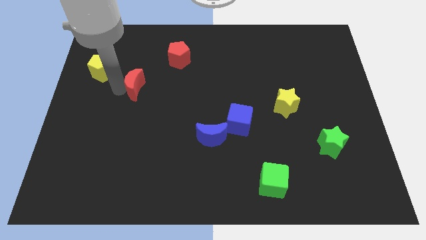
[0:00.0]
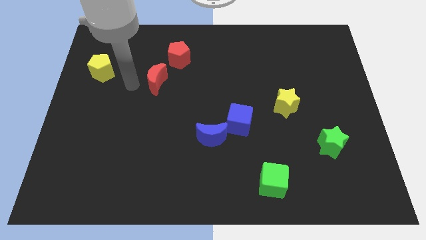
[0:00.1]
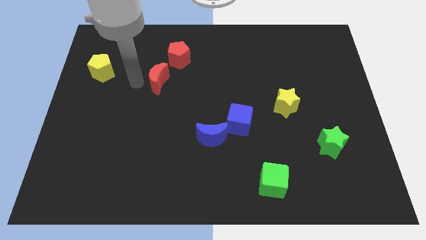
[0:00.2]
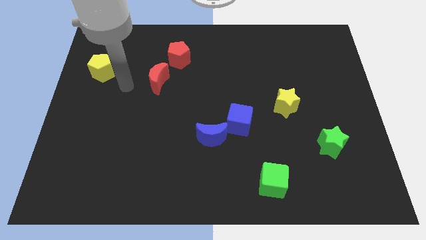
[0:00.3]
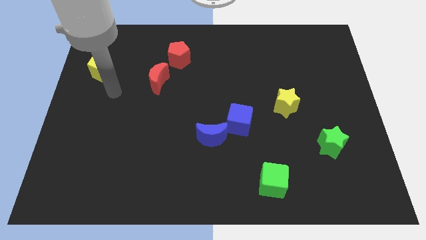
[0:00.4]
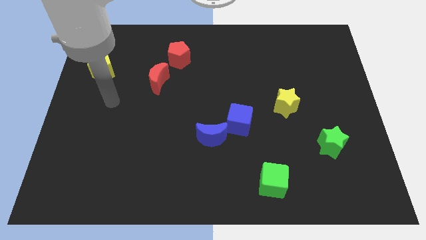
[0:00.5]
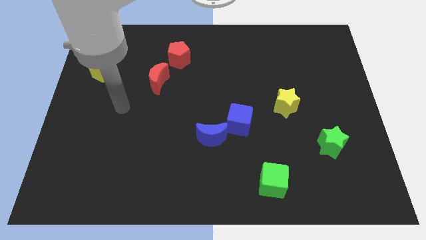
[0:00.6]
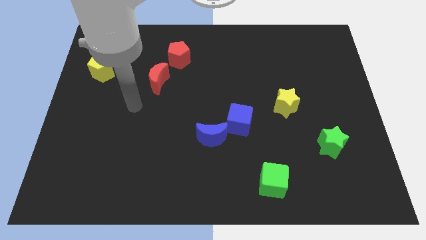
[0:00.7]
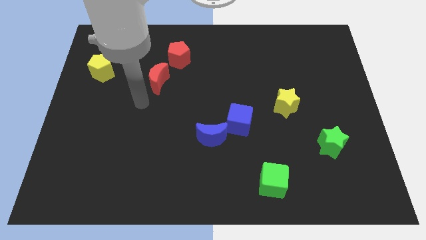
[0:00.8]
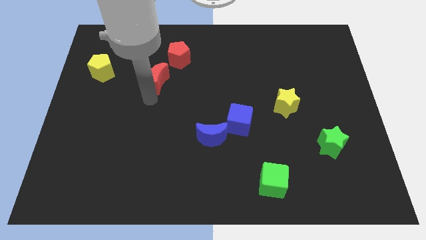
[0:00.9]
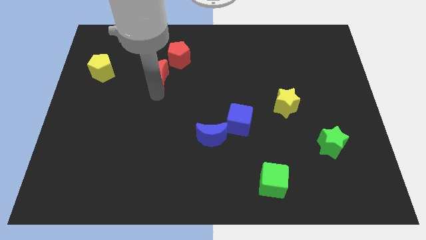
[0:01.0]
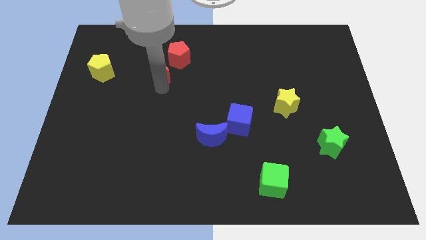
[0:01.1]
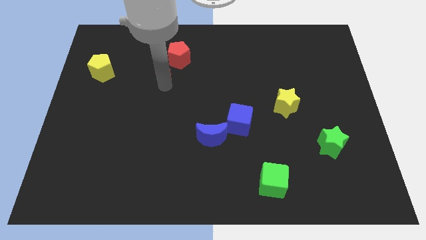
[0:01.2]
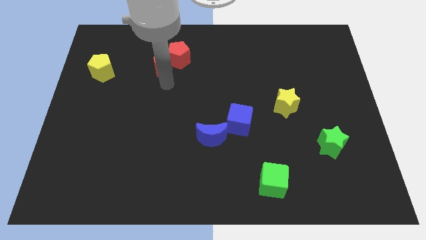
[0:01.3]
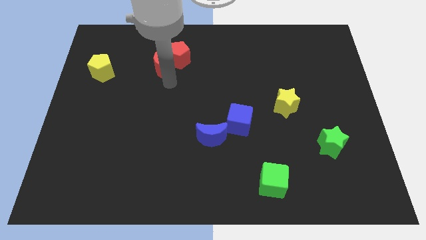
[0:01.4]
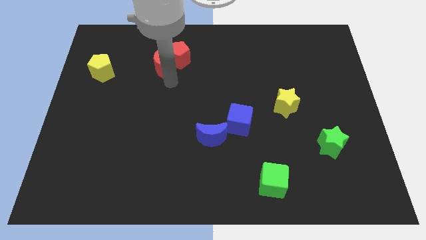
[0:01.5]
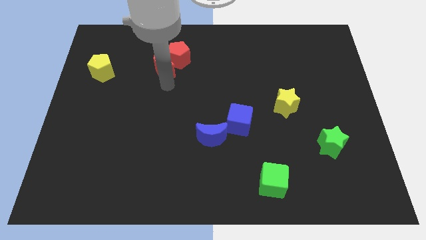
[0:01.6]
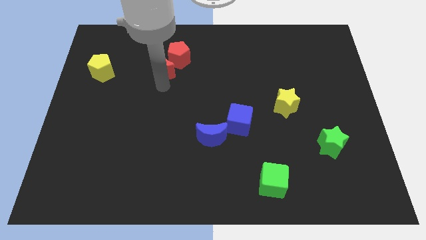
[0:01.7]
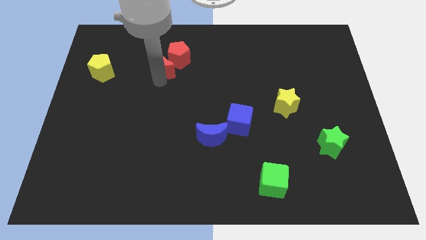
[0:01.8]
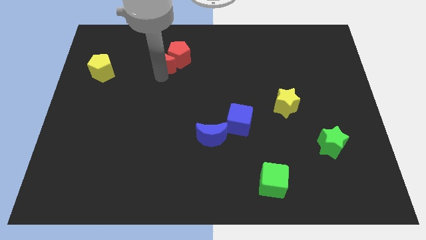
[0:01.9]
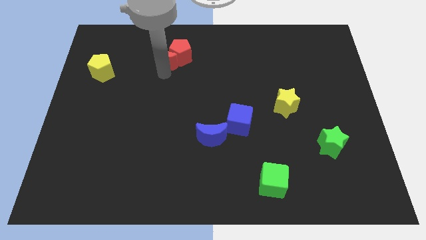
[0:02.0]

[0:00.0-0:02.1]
place red moon into red pentagon

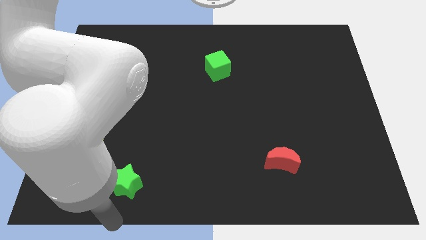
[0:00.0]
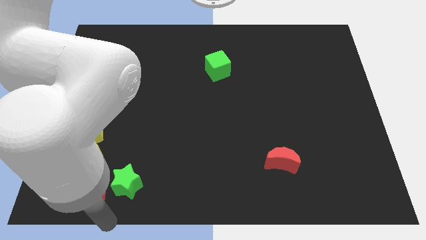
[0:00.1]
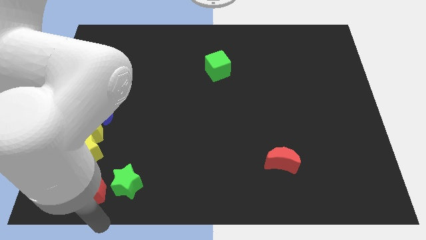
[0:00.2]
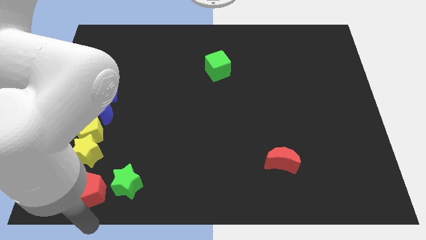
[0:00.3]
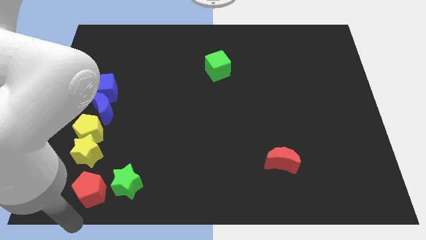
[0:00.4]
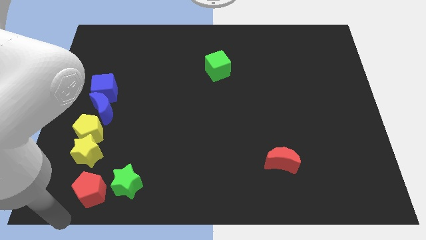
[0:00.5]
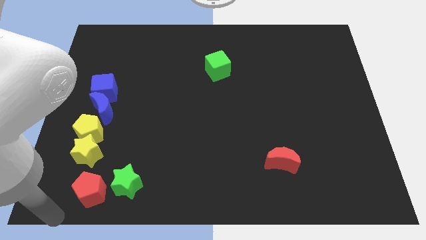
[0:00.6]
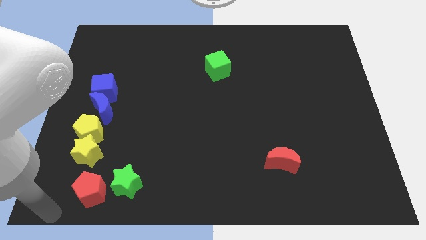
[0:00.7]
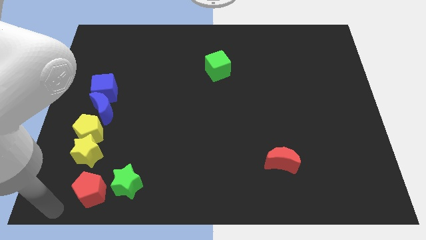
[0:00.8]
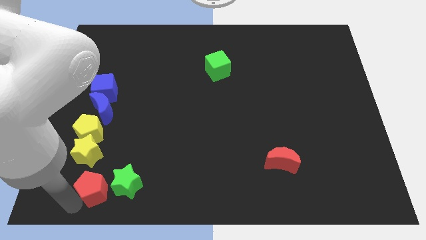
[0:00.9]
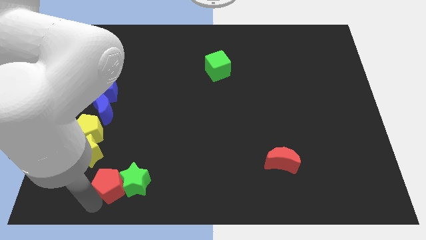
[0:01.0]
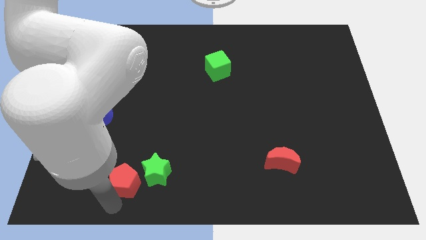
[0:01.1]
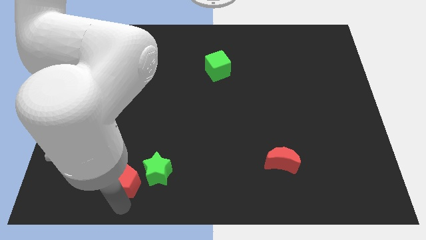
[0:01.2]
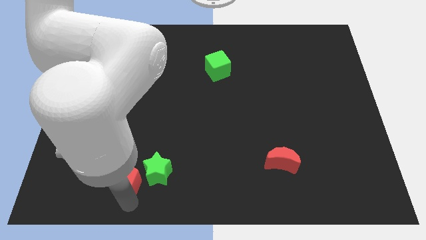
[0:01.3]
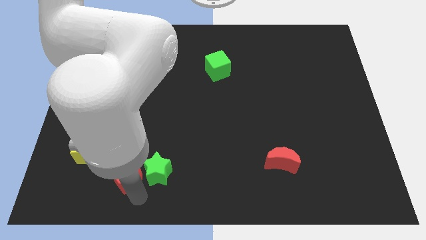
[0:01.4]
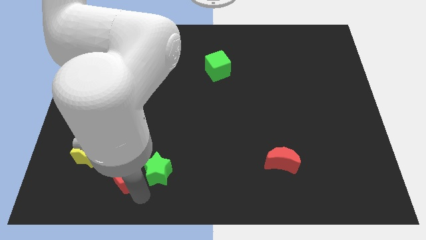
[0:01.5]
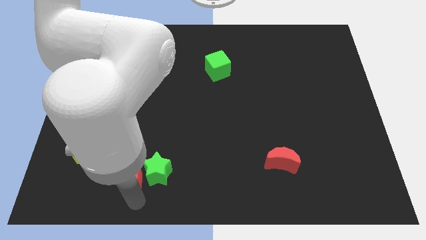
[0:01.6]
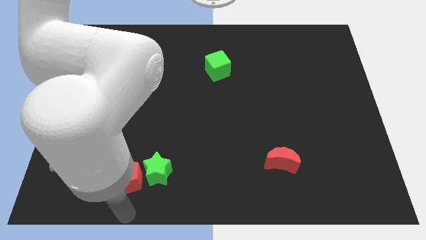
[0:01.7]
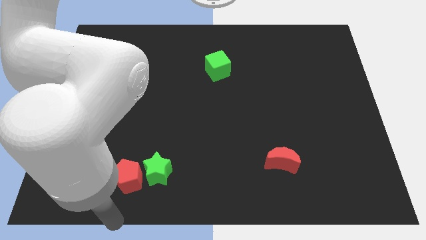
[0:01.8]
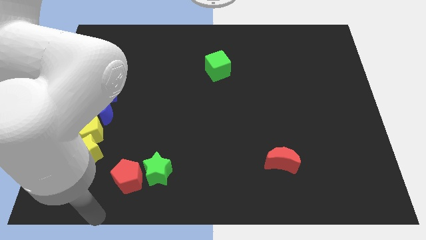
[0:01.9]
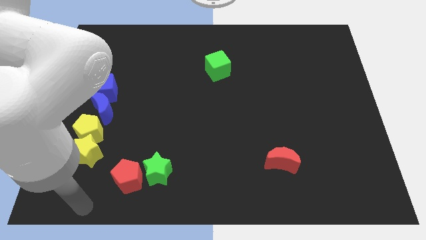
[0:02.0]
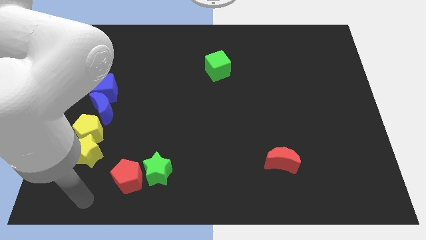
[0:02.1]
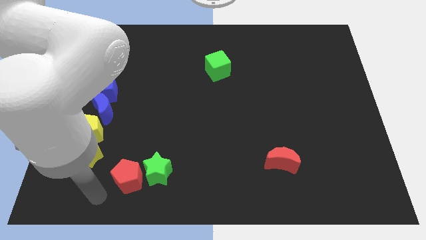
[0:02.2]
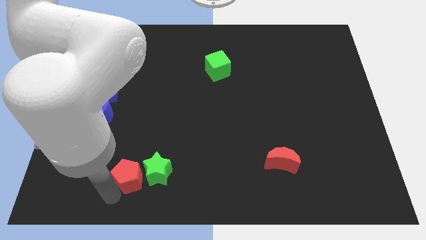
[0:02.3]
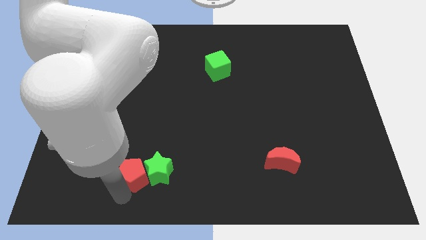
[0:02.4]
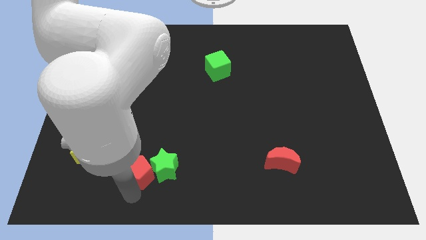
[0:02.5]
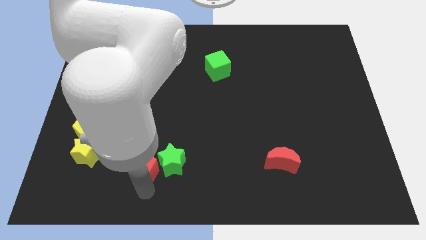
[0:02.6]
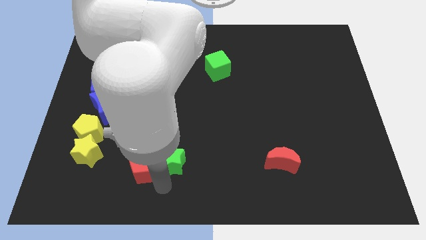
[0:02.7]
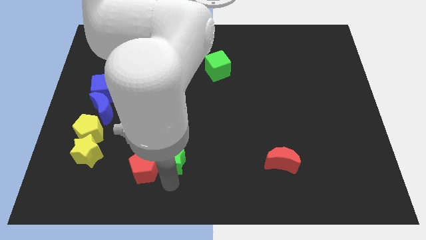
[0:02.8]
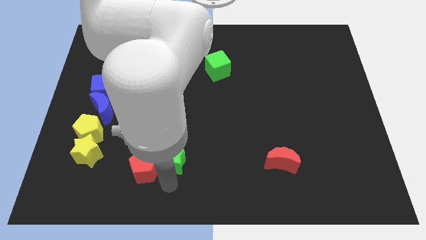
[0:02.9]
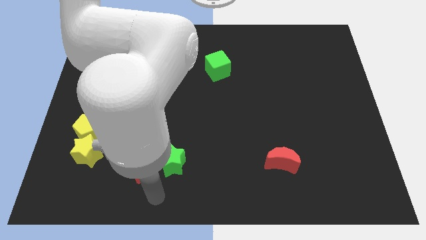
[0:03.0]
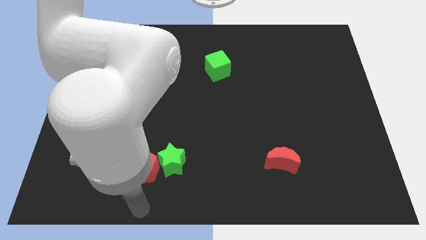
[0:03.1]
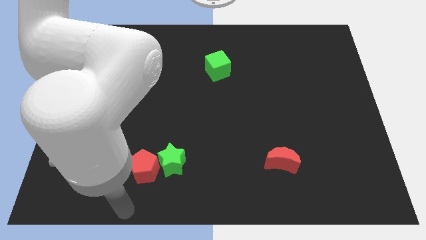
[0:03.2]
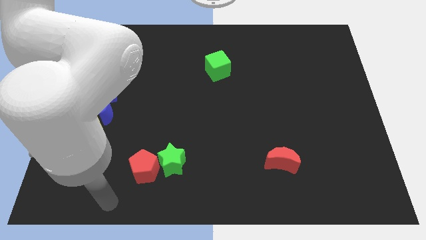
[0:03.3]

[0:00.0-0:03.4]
drag the red pentagon and green star towards right side

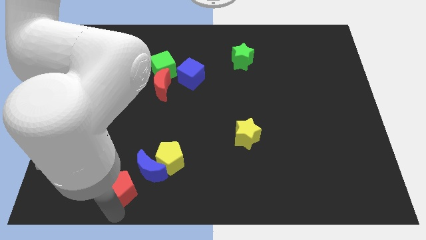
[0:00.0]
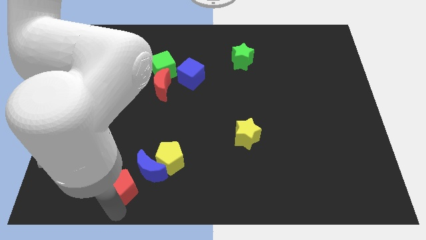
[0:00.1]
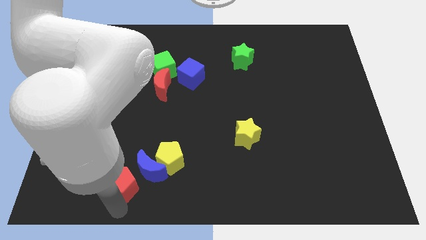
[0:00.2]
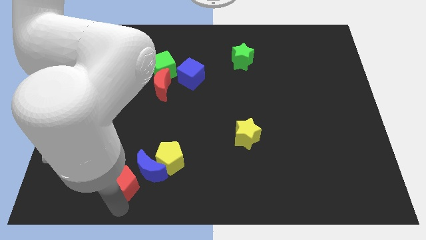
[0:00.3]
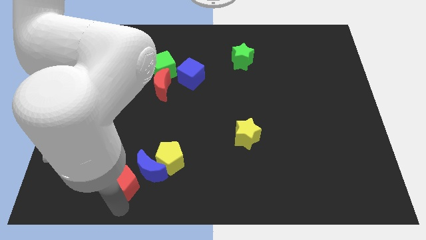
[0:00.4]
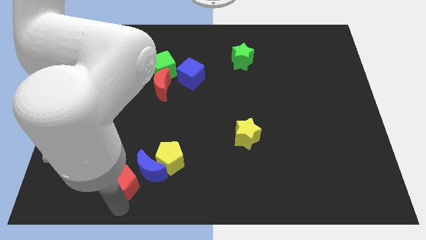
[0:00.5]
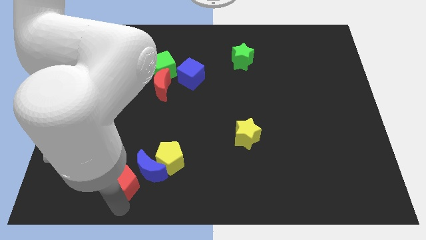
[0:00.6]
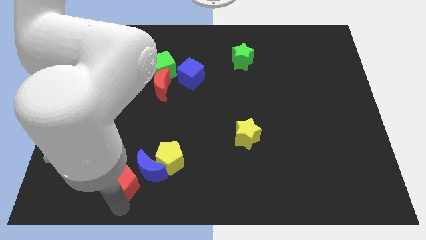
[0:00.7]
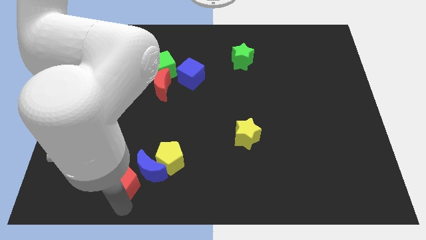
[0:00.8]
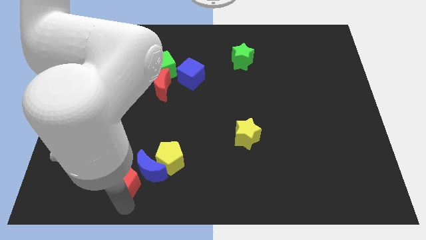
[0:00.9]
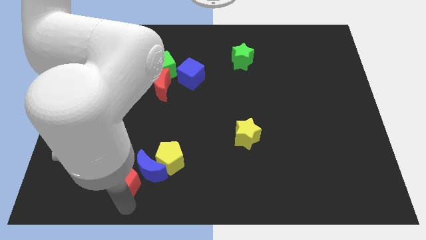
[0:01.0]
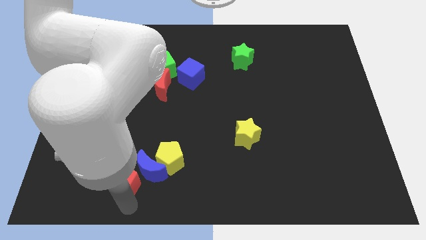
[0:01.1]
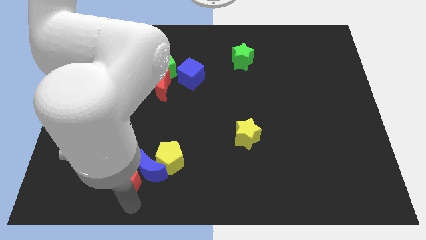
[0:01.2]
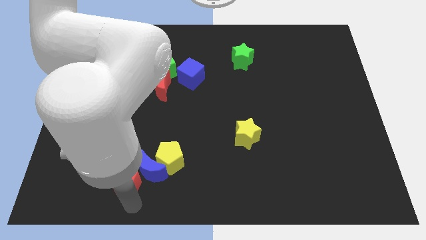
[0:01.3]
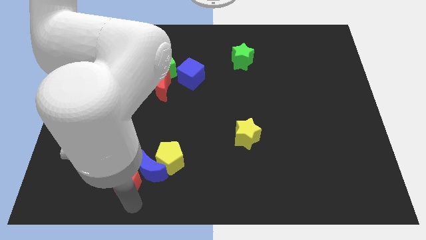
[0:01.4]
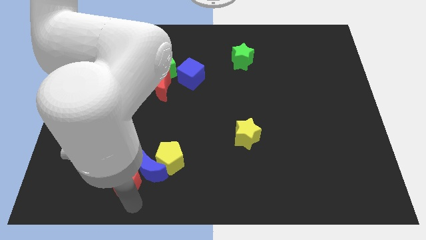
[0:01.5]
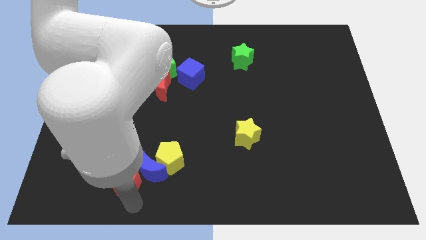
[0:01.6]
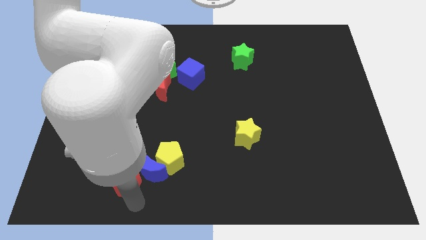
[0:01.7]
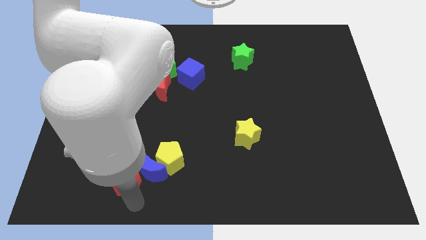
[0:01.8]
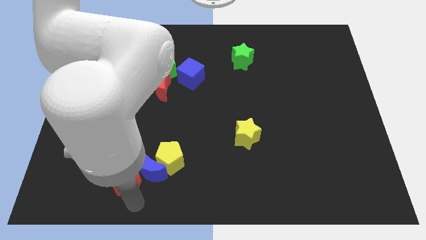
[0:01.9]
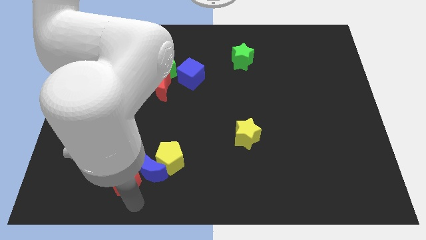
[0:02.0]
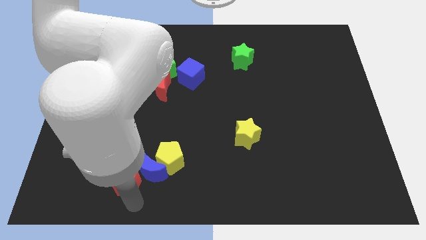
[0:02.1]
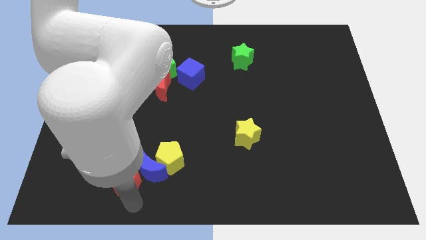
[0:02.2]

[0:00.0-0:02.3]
push the red pentagon close to the blue moon

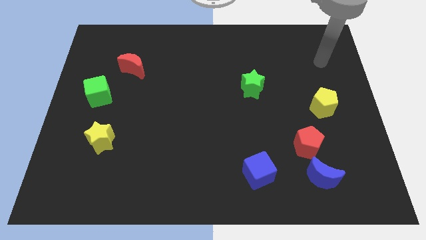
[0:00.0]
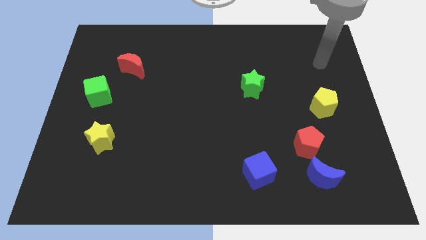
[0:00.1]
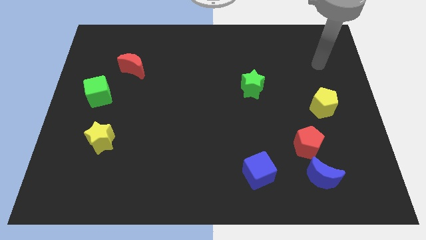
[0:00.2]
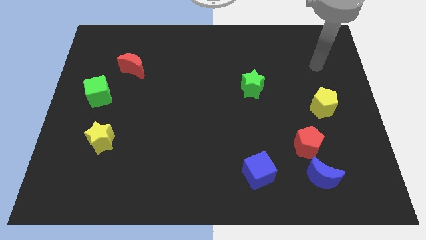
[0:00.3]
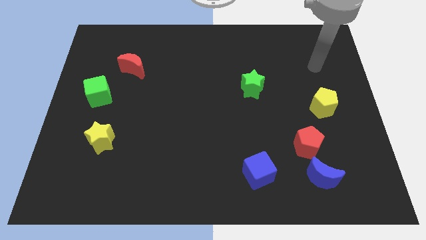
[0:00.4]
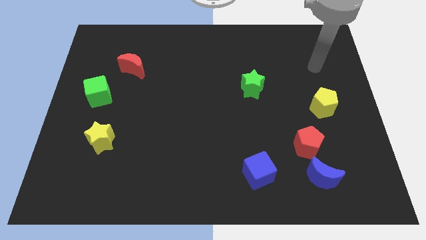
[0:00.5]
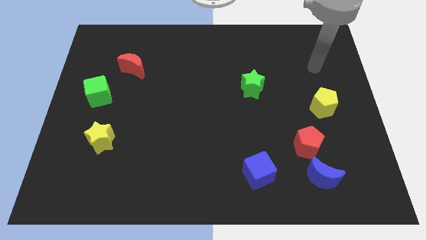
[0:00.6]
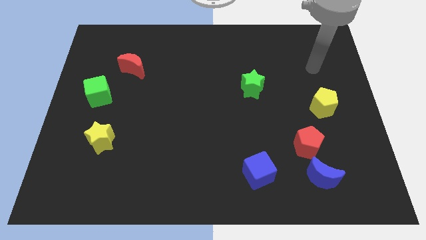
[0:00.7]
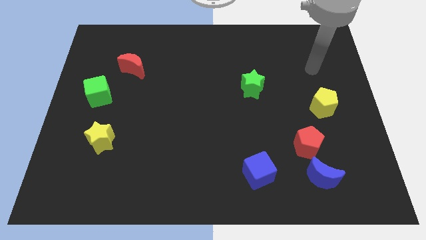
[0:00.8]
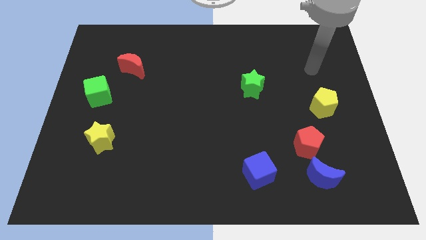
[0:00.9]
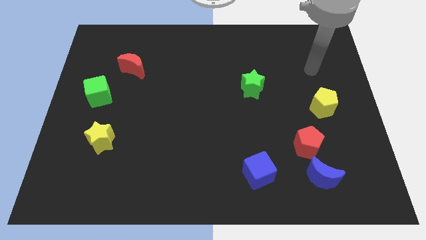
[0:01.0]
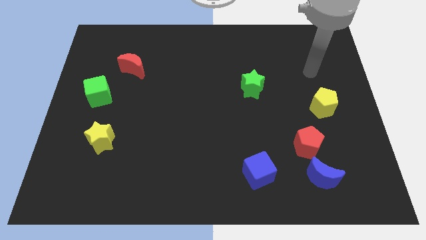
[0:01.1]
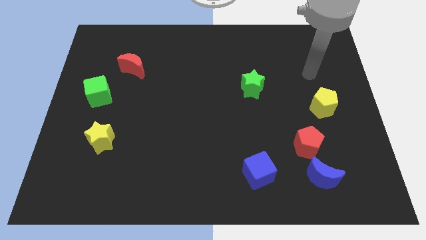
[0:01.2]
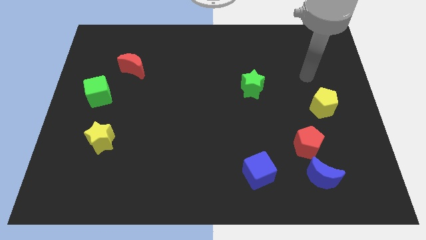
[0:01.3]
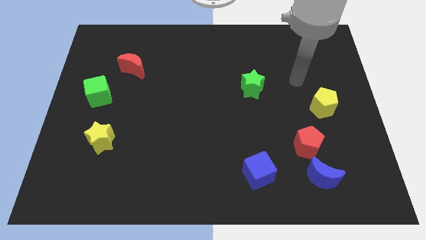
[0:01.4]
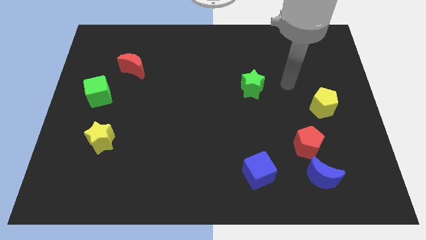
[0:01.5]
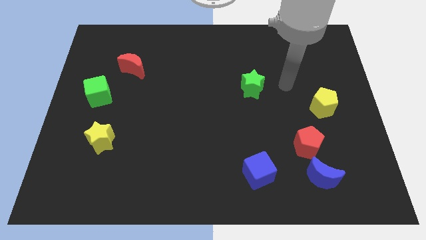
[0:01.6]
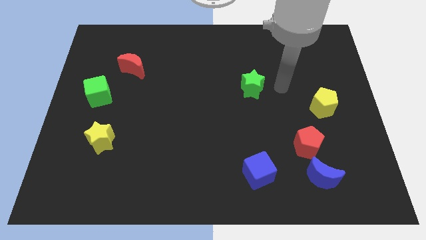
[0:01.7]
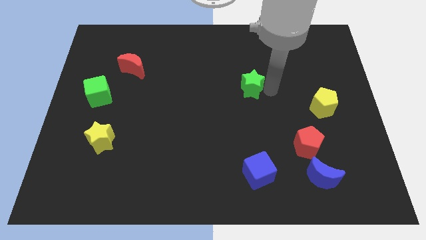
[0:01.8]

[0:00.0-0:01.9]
point your arm at the right of the green star
